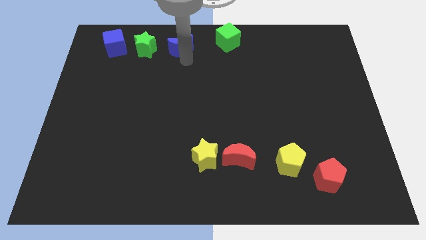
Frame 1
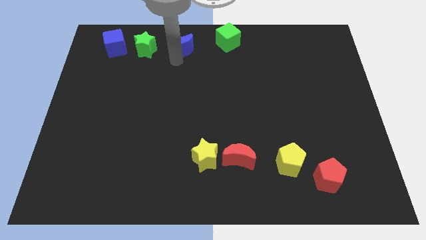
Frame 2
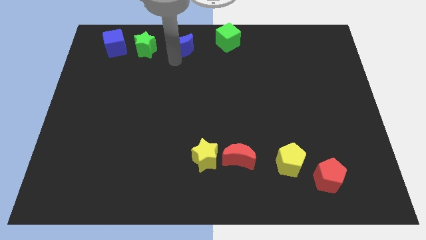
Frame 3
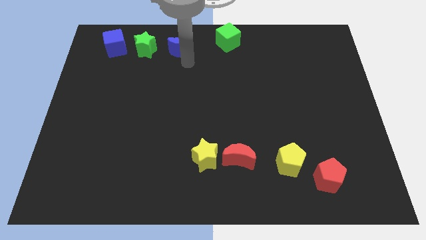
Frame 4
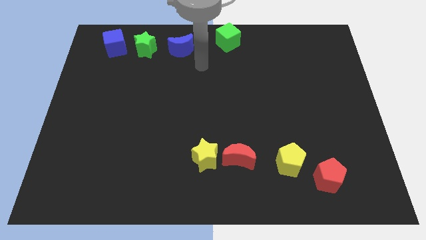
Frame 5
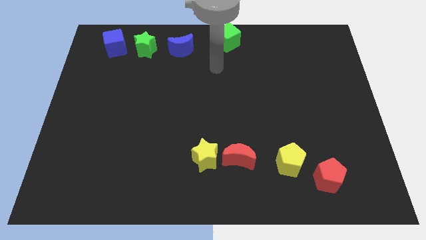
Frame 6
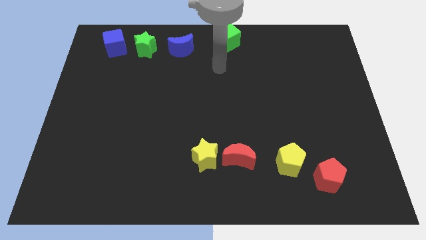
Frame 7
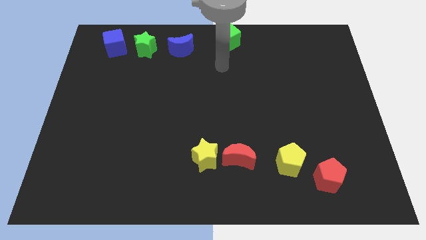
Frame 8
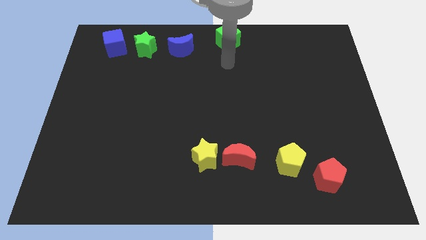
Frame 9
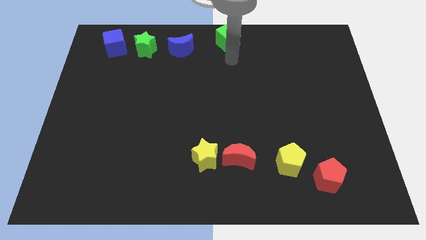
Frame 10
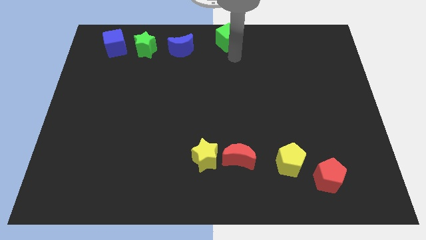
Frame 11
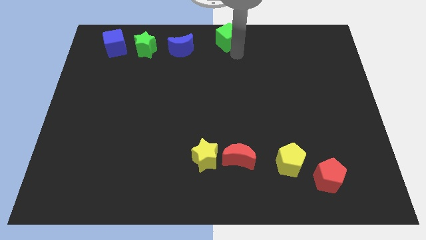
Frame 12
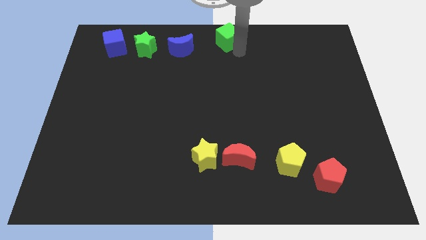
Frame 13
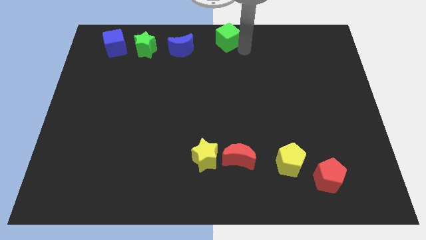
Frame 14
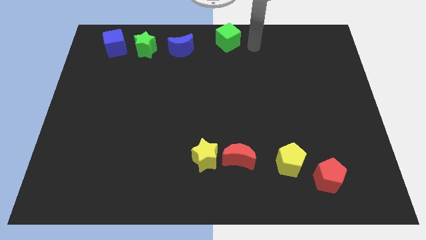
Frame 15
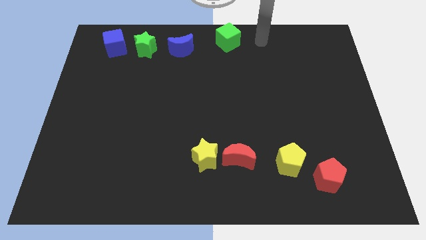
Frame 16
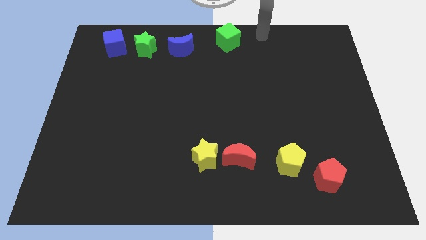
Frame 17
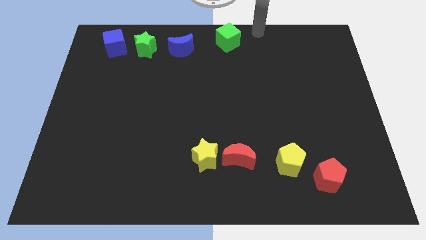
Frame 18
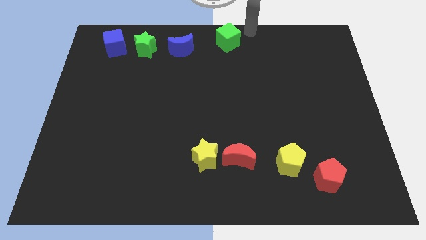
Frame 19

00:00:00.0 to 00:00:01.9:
move your arm away from the blue moon

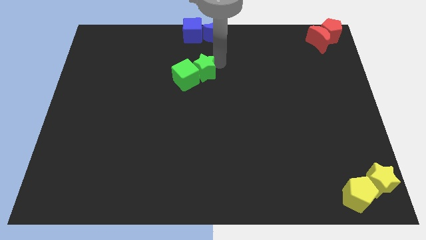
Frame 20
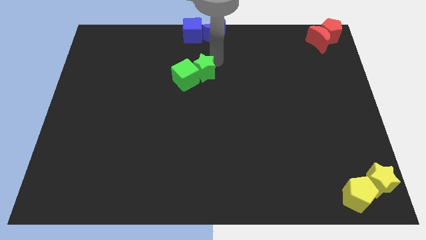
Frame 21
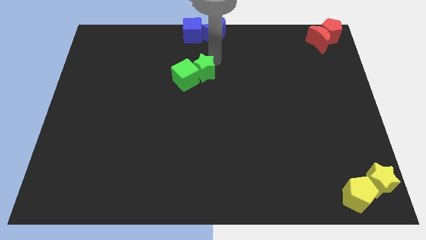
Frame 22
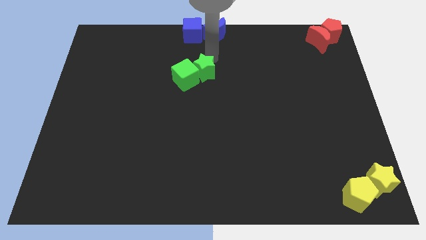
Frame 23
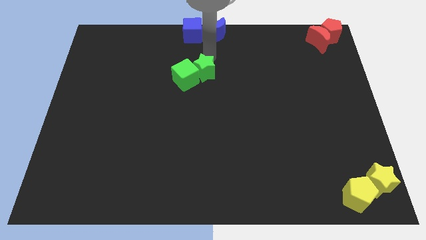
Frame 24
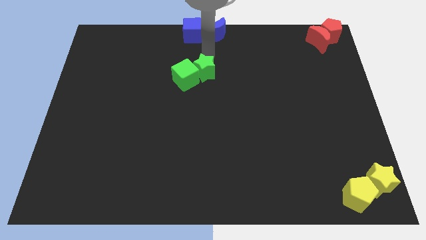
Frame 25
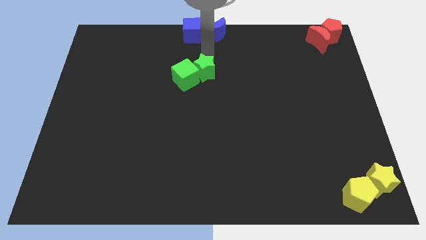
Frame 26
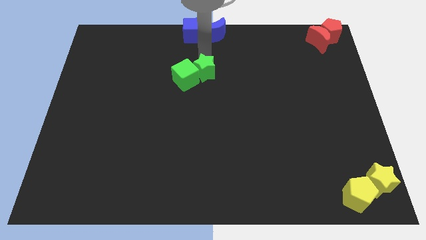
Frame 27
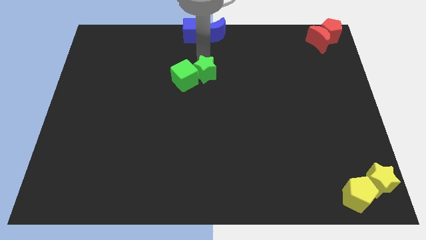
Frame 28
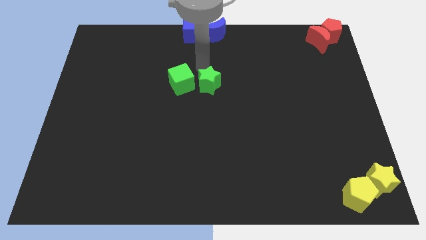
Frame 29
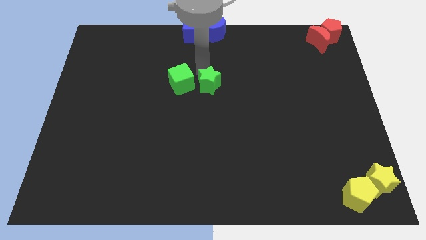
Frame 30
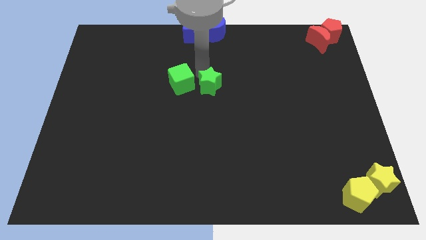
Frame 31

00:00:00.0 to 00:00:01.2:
push the green star slightly down

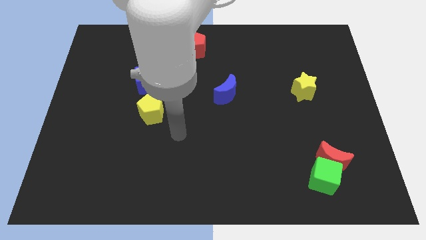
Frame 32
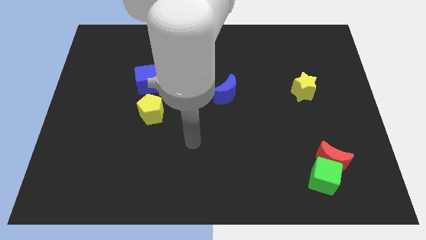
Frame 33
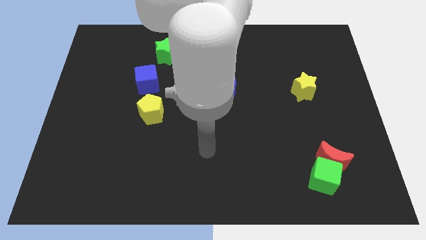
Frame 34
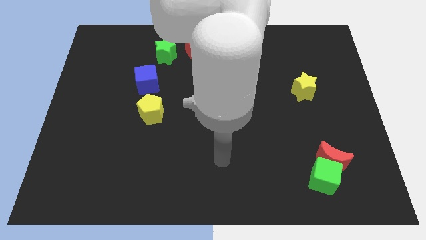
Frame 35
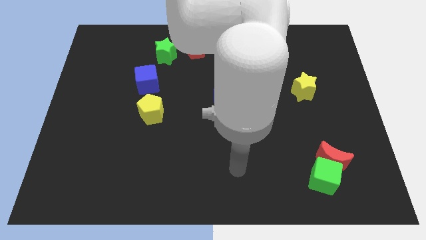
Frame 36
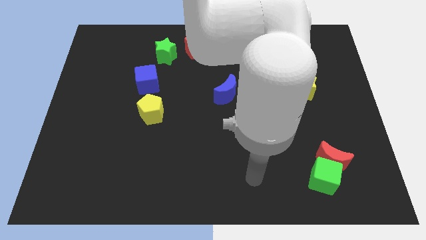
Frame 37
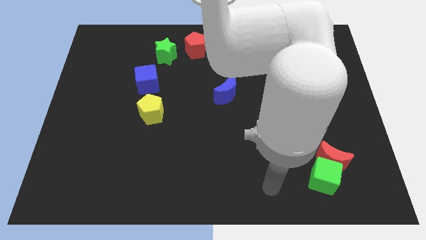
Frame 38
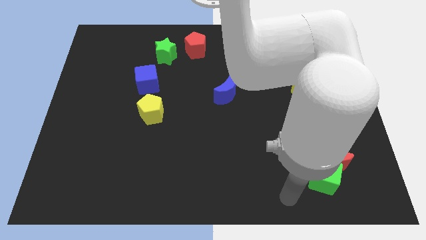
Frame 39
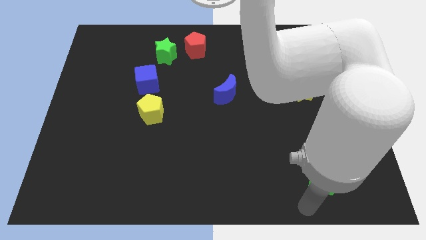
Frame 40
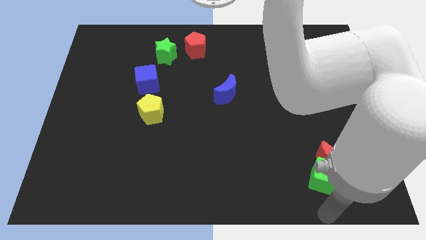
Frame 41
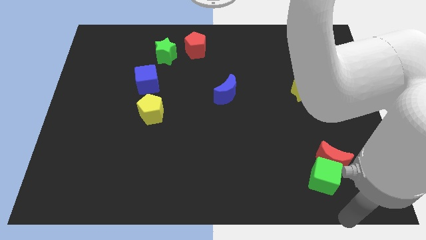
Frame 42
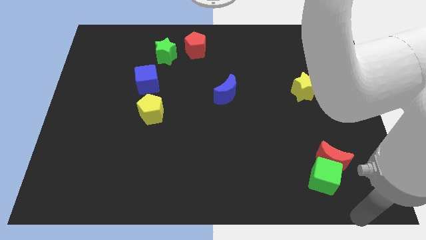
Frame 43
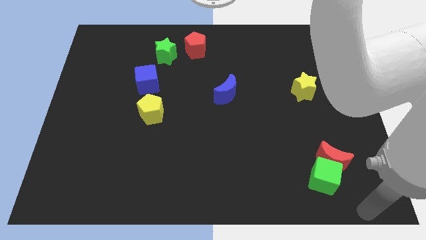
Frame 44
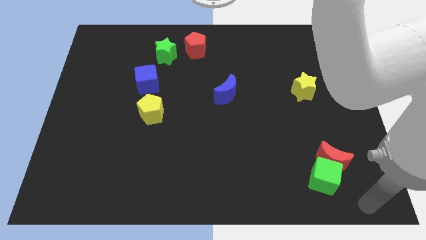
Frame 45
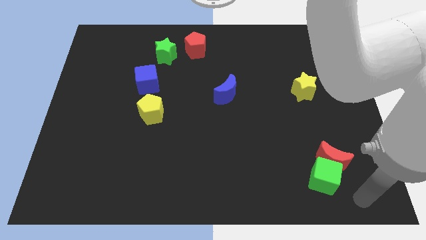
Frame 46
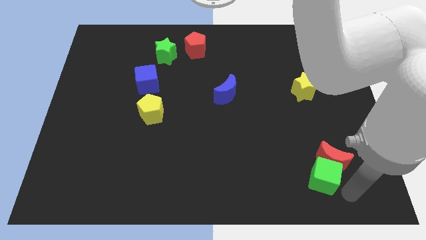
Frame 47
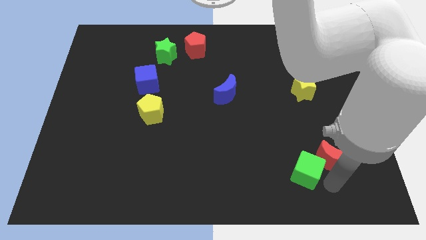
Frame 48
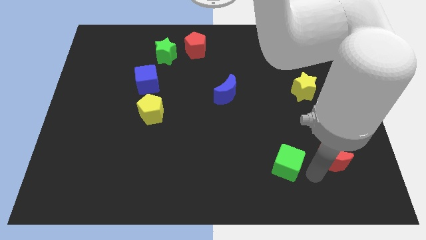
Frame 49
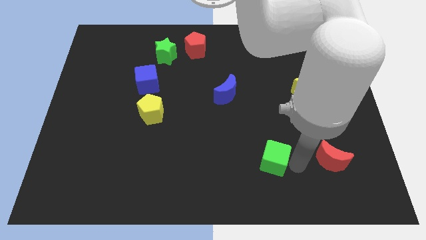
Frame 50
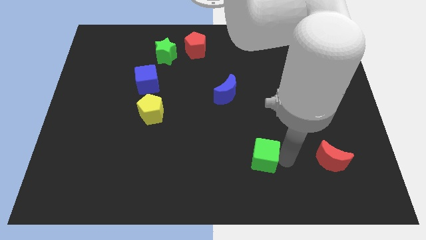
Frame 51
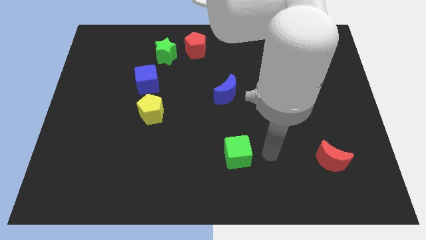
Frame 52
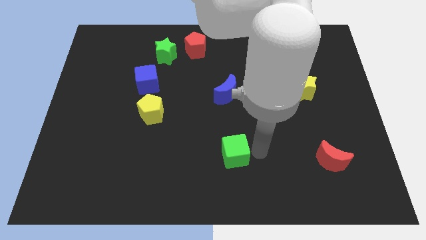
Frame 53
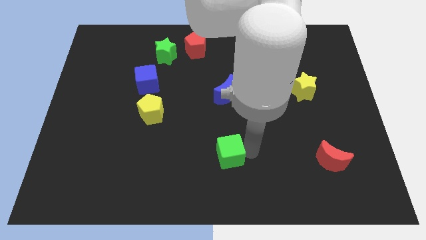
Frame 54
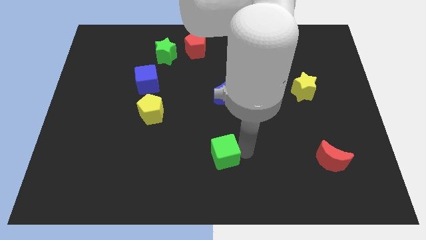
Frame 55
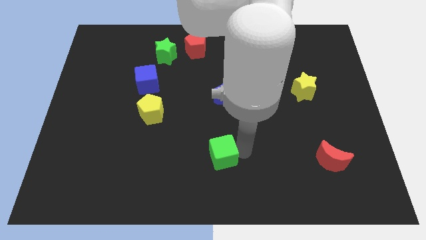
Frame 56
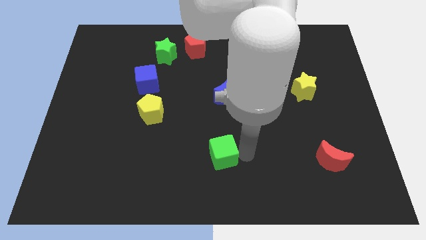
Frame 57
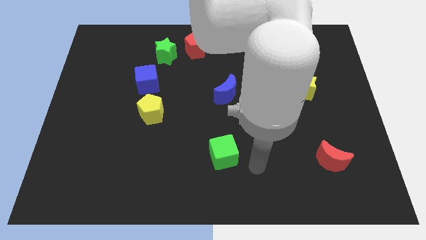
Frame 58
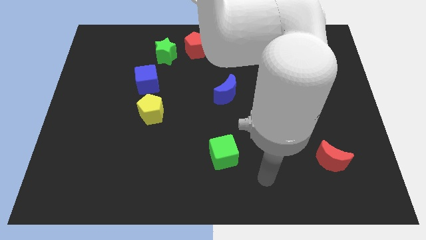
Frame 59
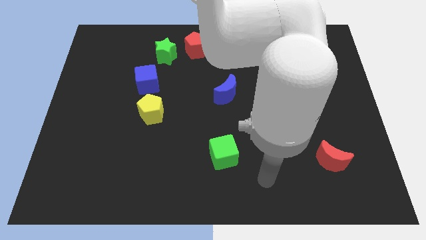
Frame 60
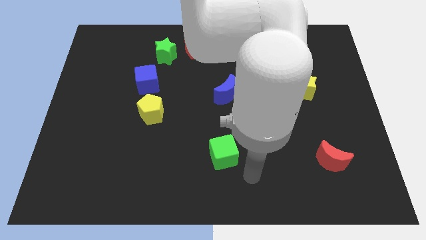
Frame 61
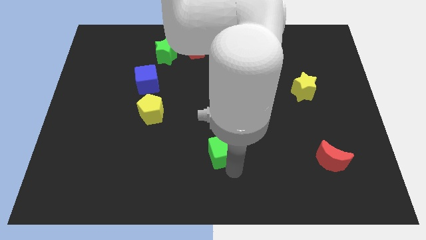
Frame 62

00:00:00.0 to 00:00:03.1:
separate green cube from red crescent

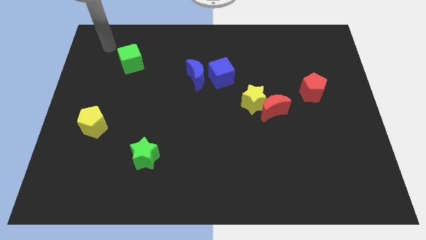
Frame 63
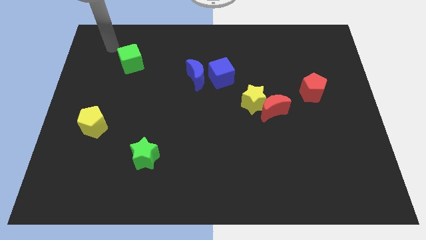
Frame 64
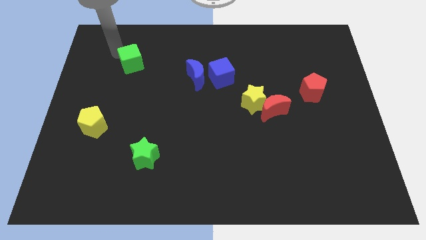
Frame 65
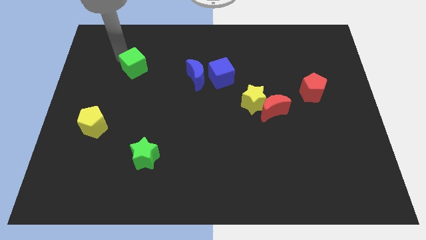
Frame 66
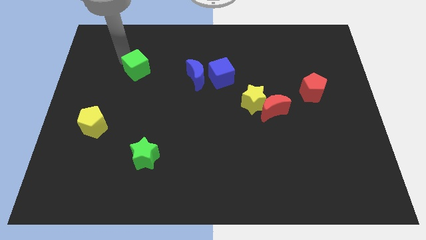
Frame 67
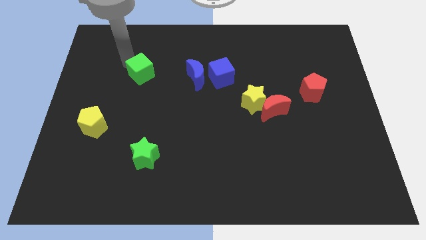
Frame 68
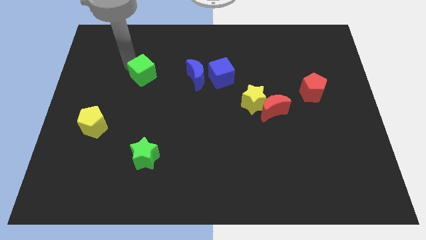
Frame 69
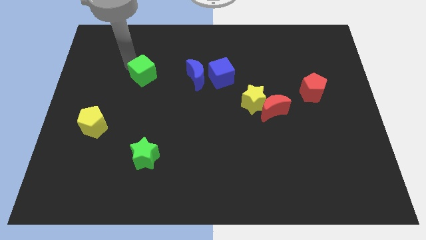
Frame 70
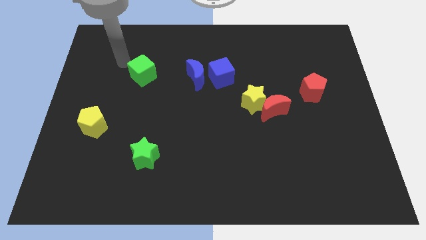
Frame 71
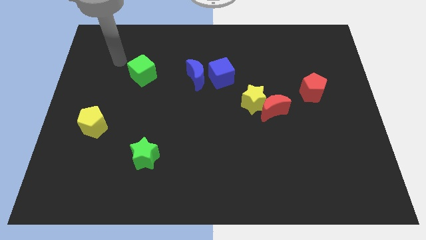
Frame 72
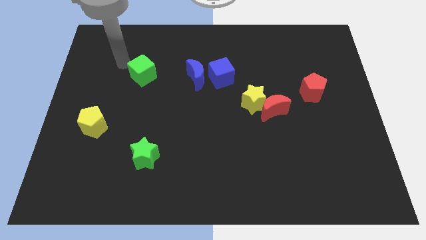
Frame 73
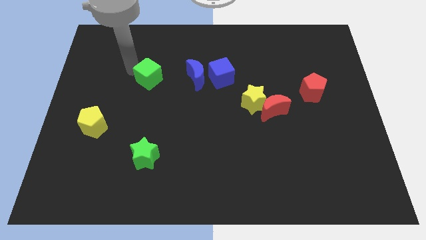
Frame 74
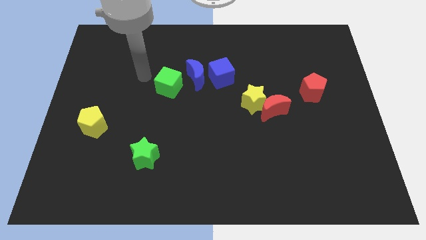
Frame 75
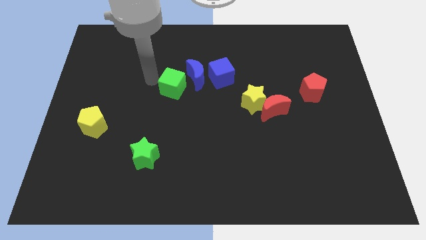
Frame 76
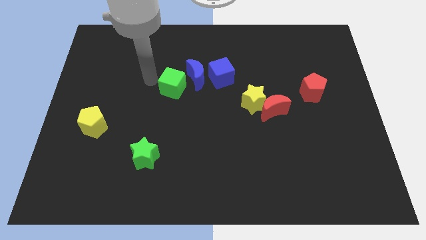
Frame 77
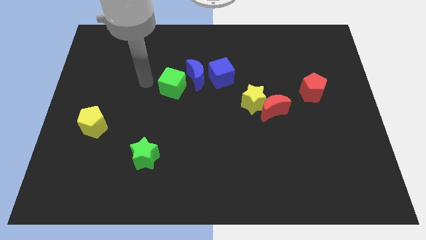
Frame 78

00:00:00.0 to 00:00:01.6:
push the green cube to the left side of the blue moon

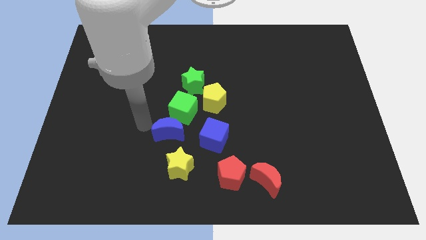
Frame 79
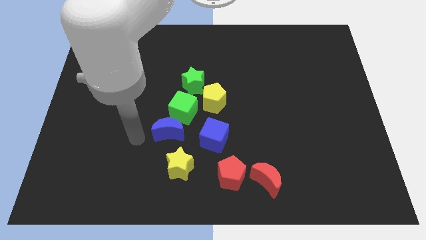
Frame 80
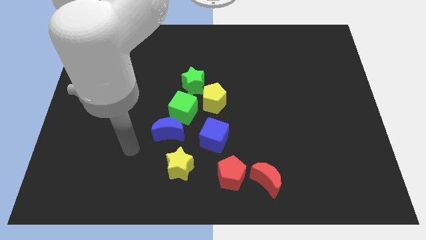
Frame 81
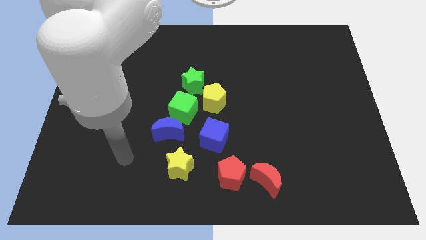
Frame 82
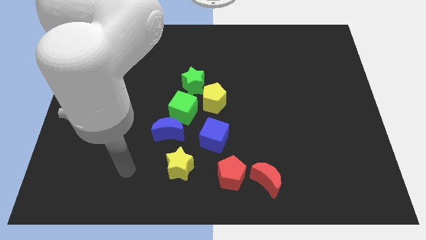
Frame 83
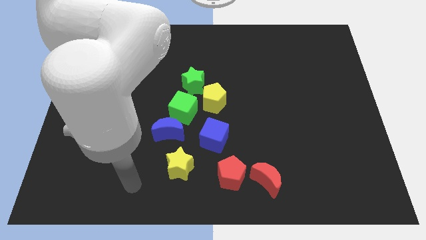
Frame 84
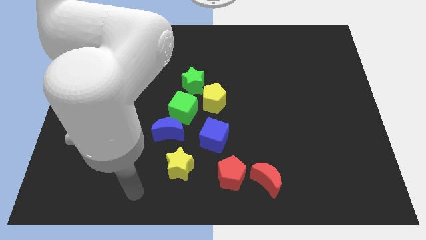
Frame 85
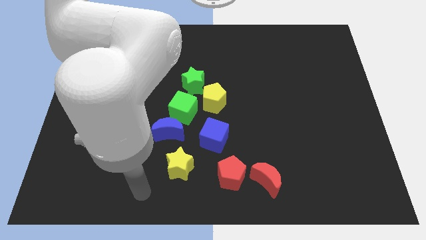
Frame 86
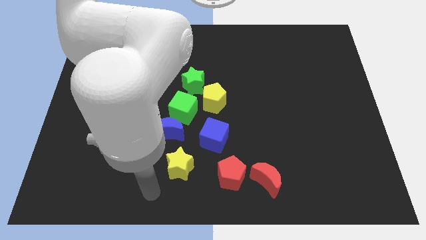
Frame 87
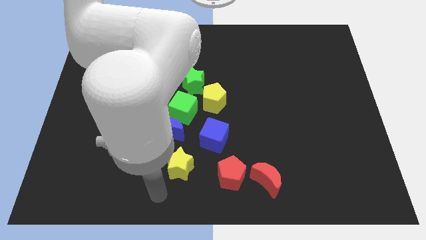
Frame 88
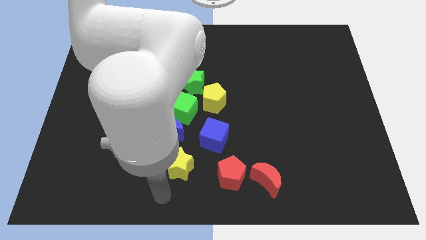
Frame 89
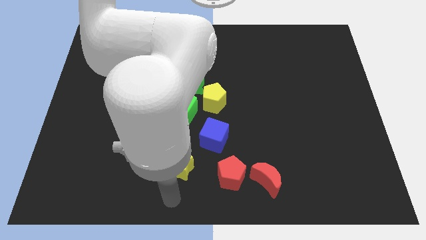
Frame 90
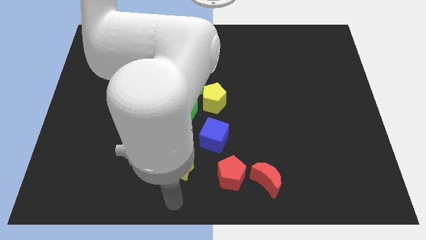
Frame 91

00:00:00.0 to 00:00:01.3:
point your arm at the bottom of the yellow star
